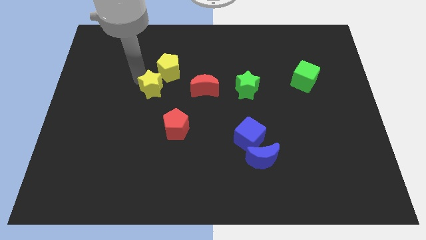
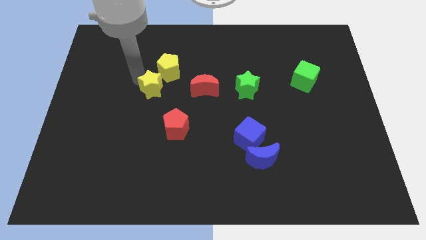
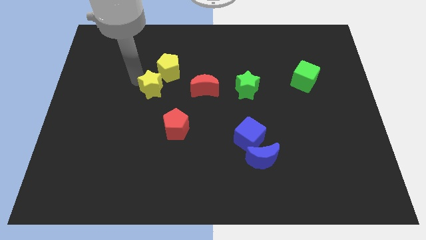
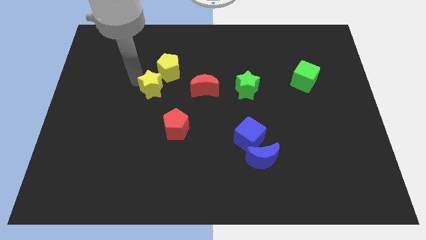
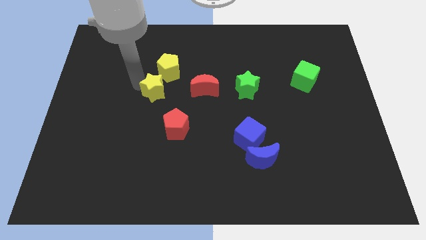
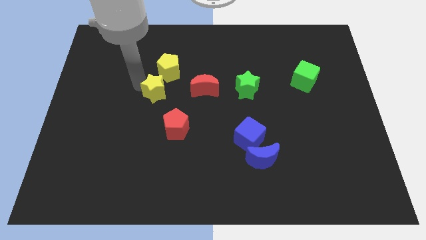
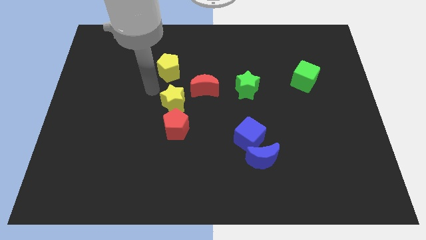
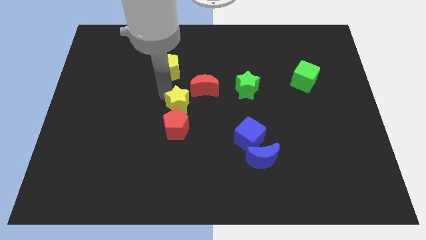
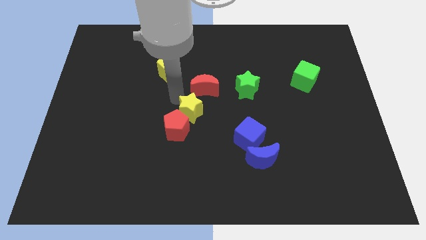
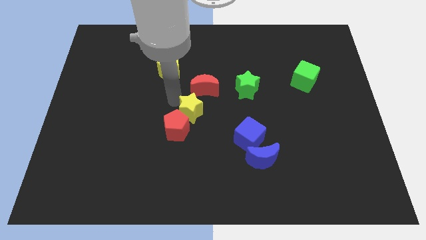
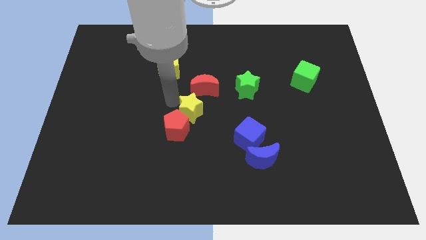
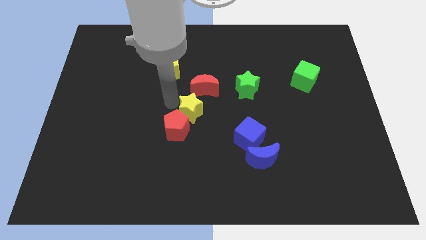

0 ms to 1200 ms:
move the yellow star in between the red blocks

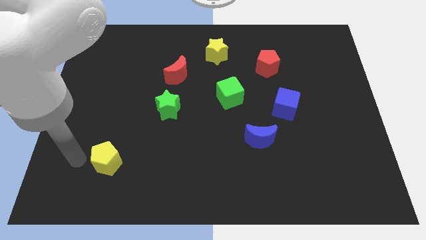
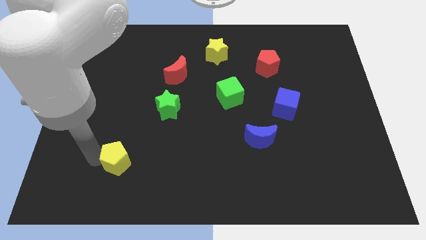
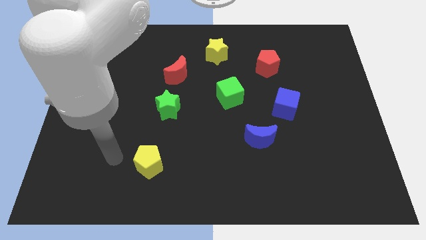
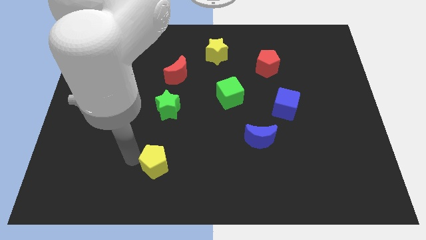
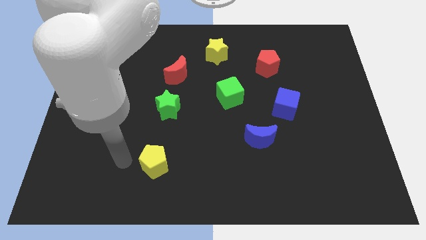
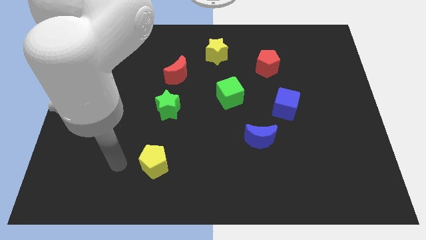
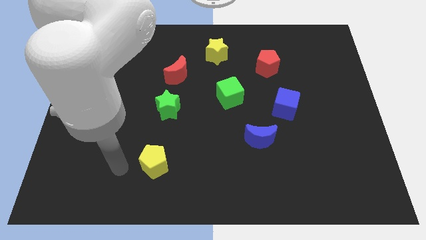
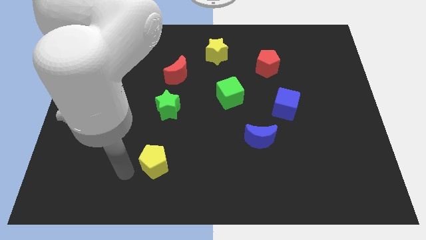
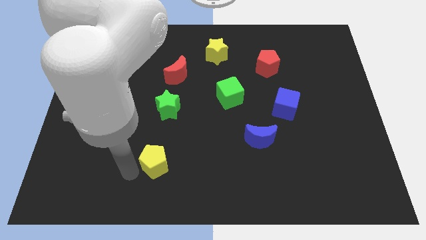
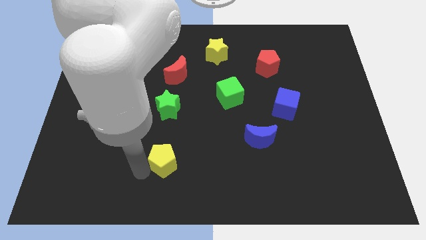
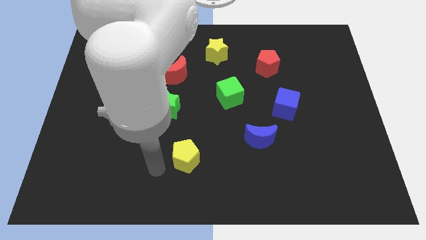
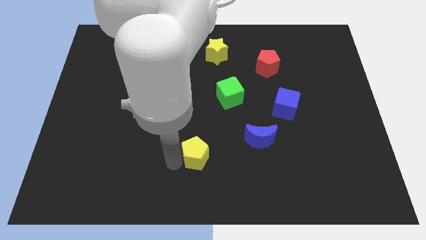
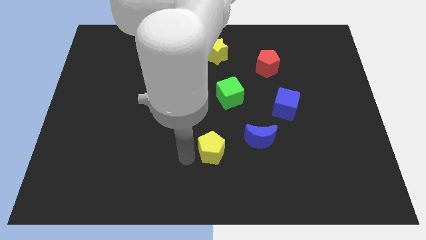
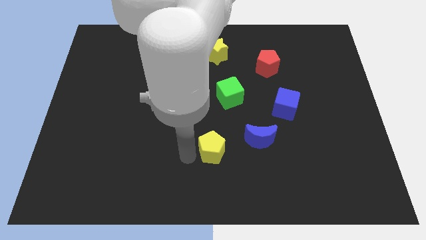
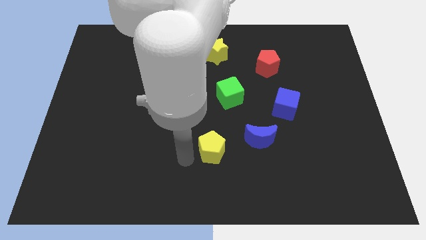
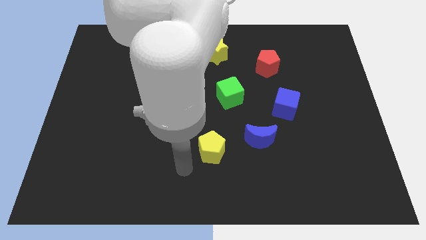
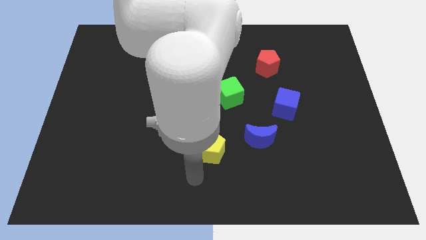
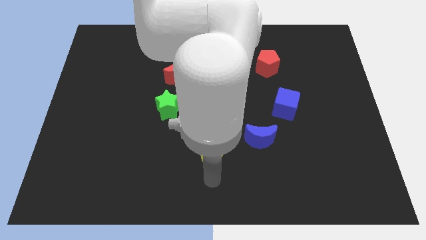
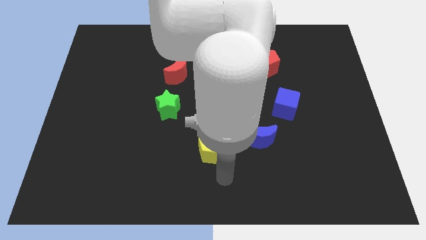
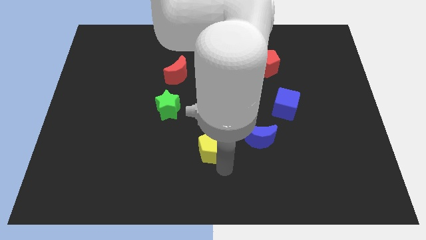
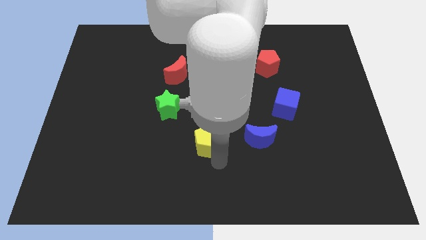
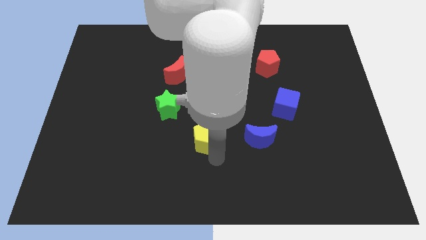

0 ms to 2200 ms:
move the yellow pentagon at the left side of the blue crescent

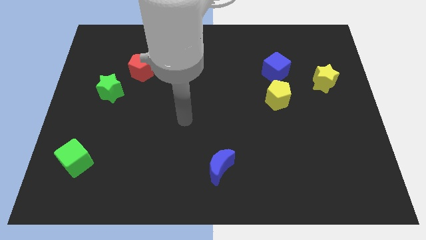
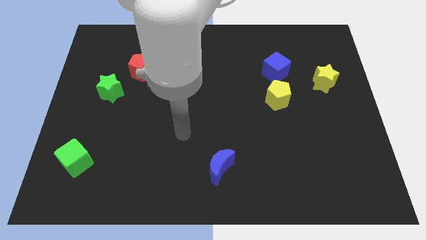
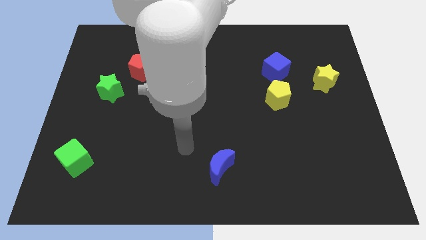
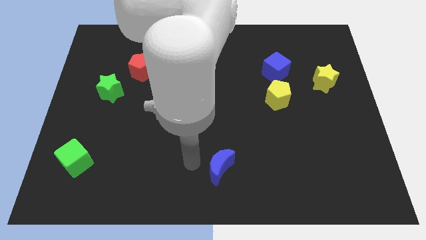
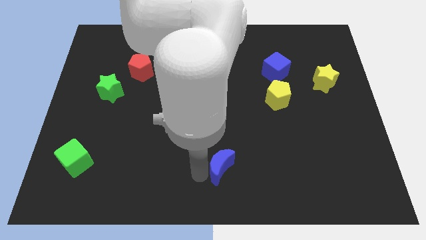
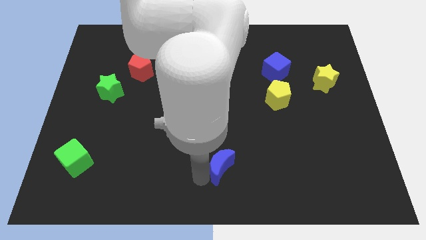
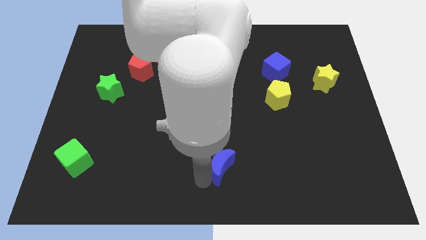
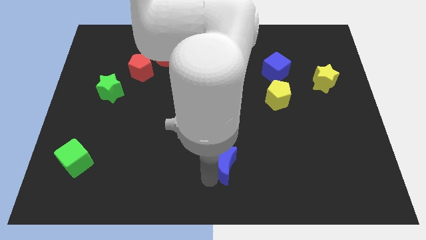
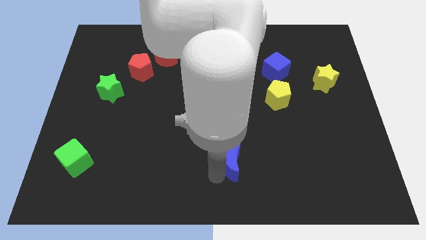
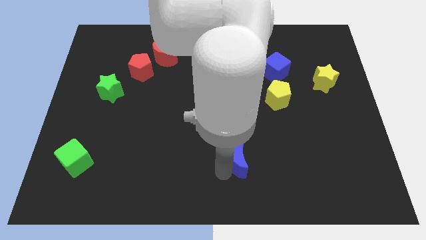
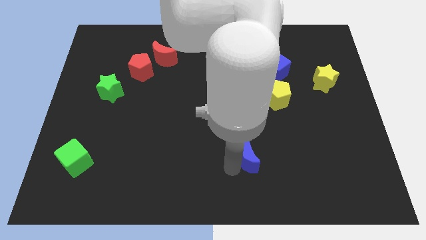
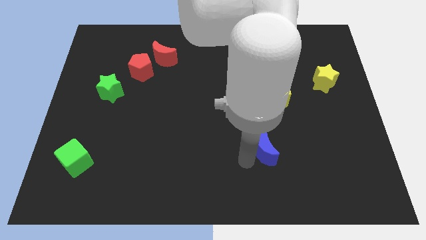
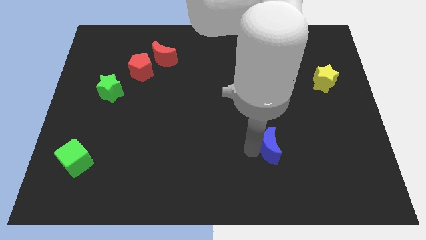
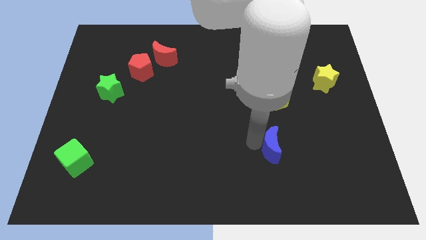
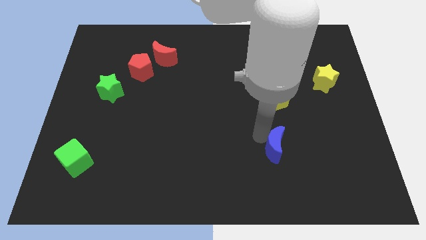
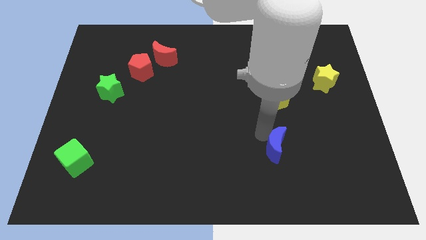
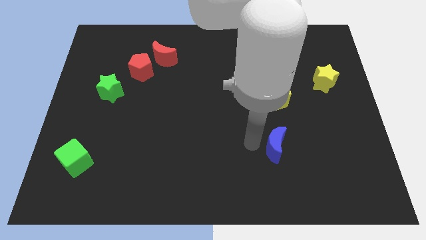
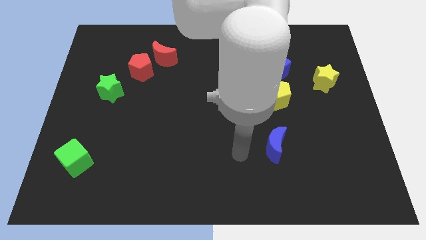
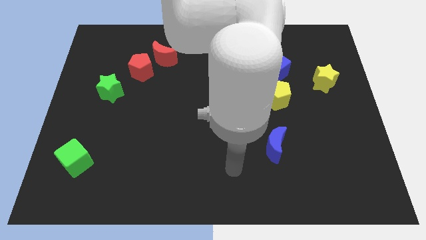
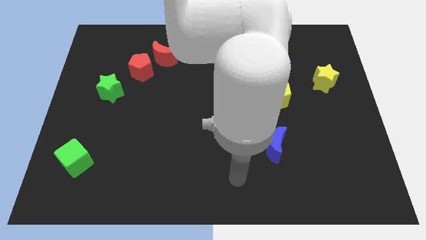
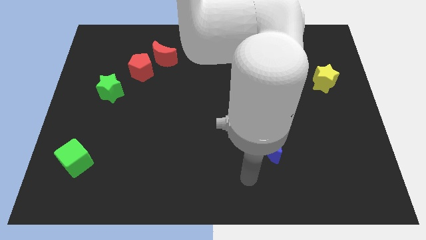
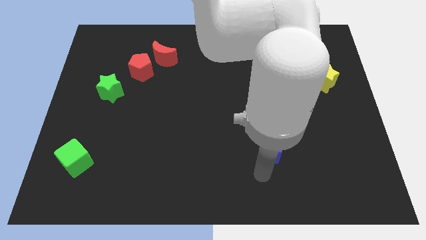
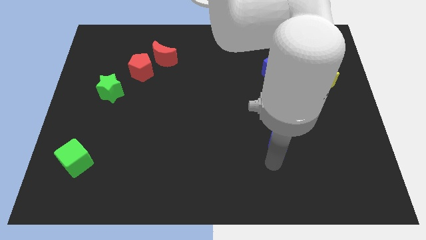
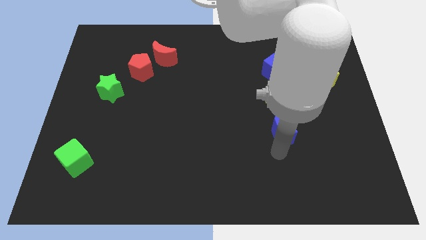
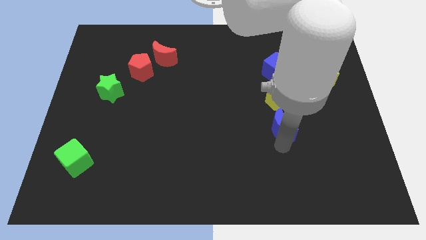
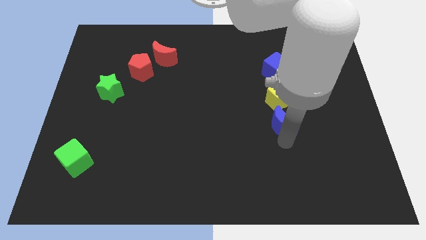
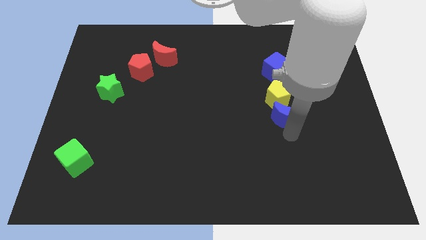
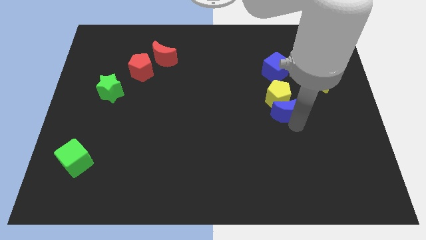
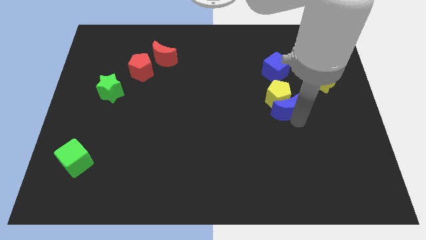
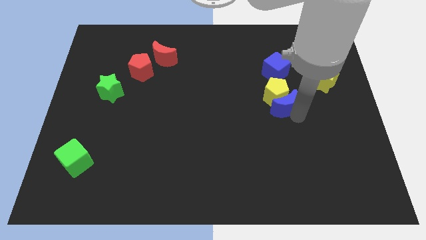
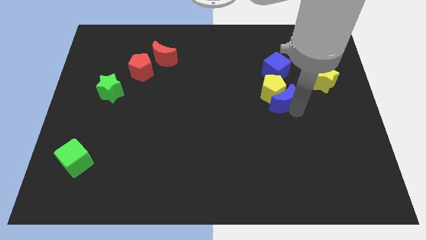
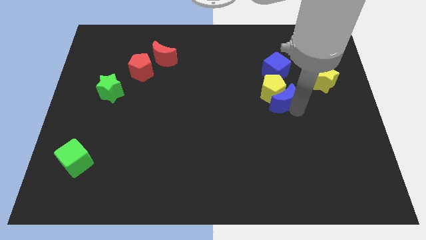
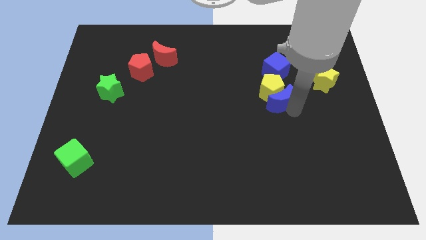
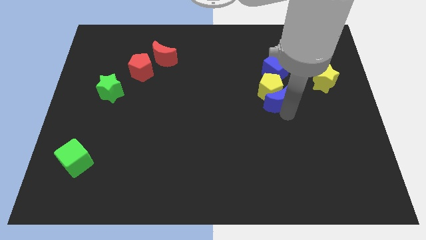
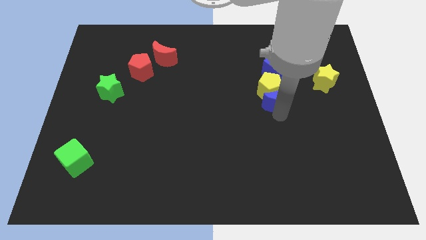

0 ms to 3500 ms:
push blue crescent in to yellow pentagon

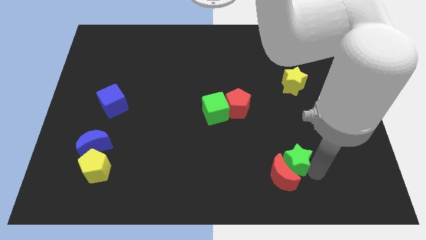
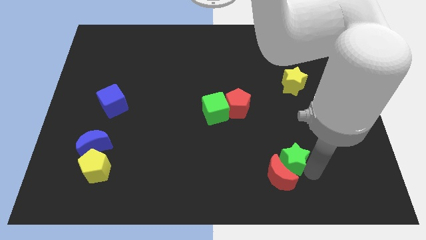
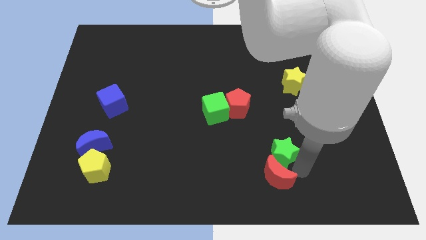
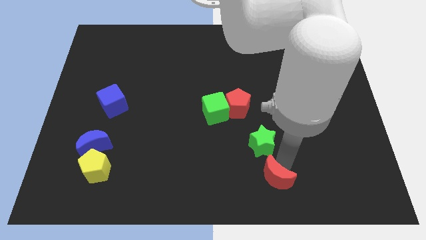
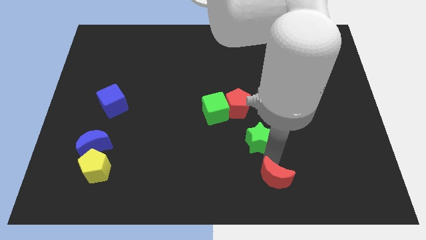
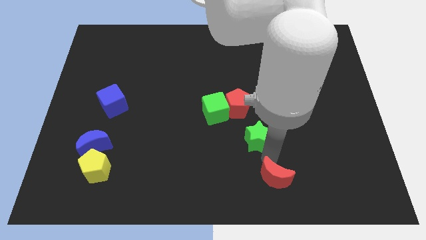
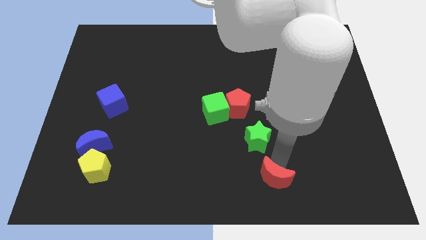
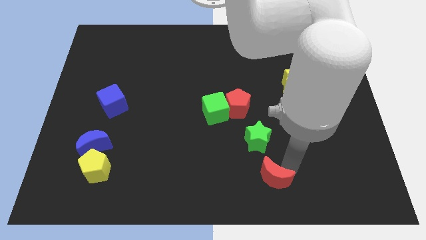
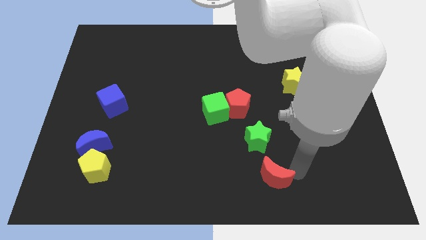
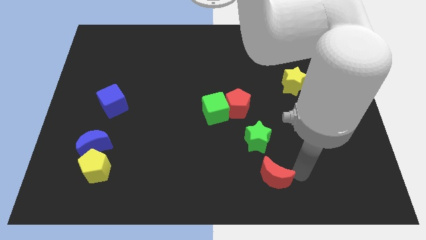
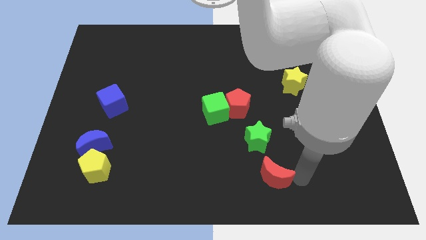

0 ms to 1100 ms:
move the green star diagonal to the red pentagon

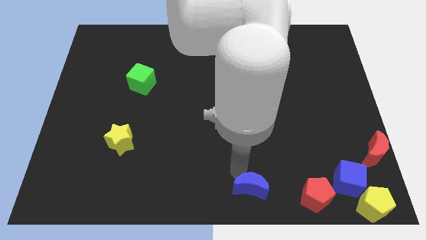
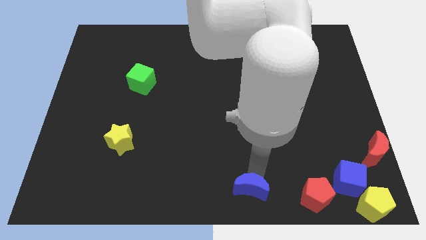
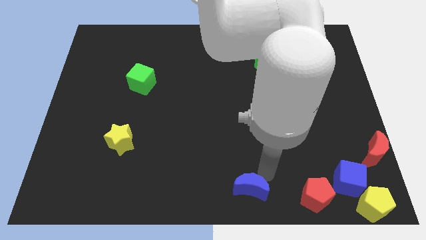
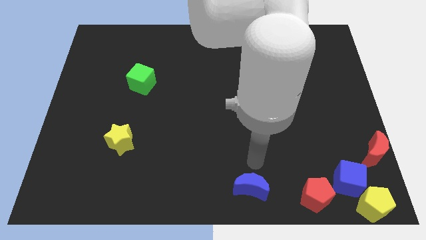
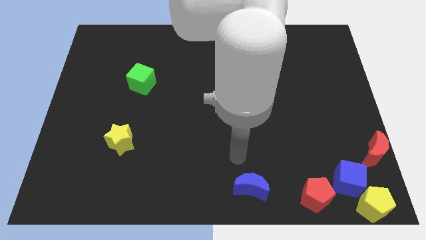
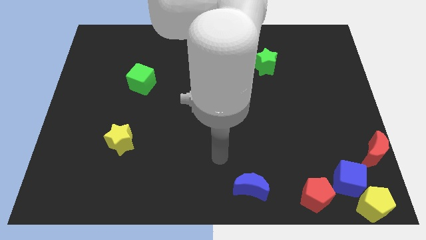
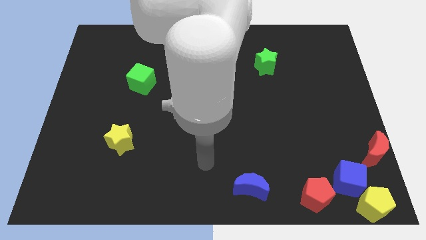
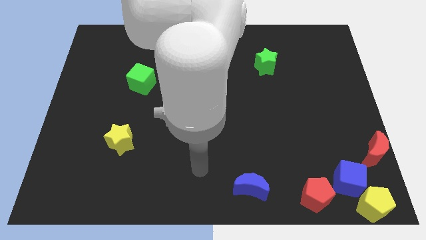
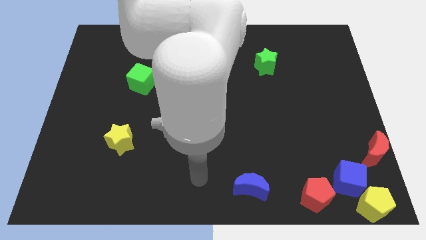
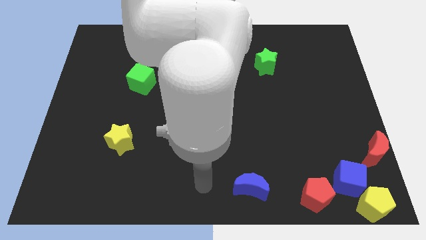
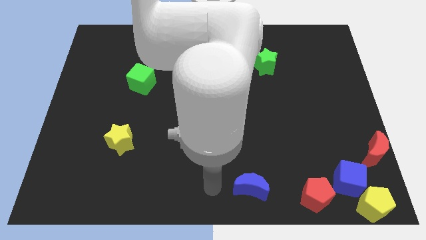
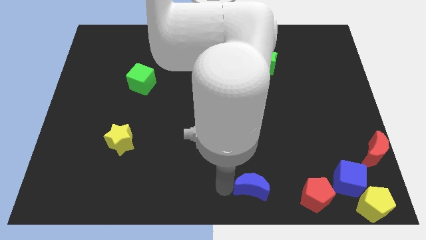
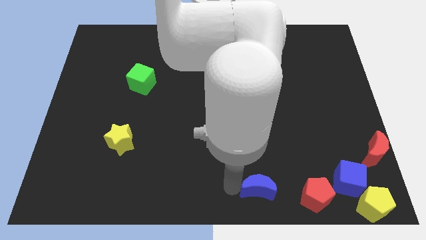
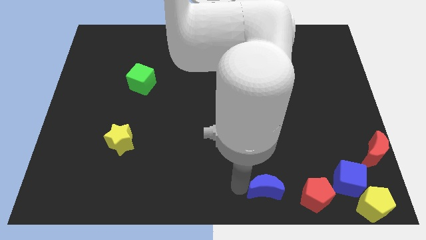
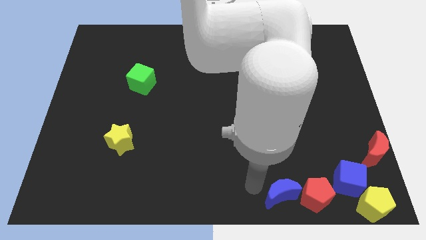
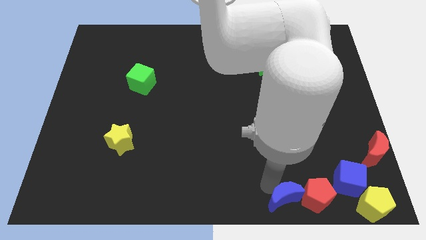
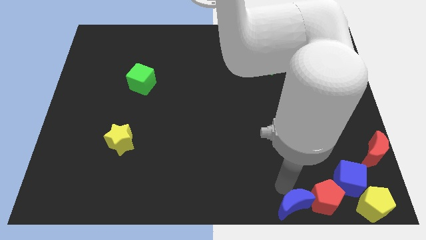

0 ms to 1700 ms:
push blue crescent into the red pentagon
